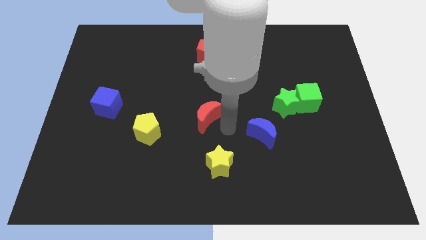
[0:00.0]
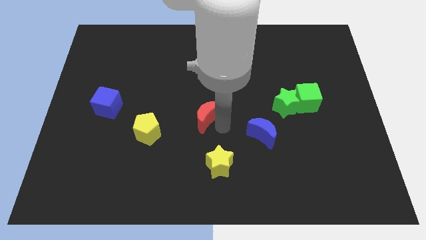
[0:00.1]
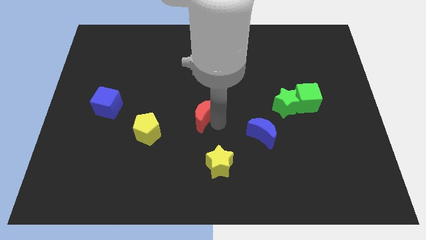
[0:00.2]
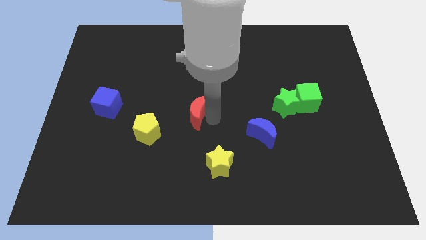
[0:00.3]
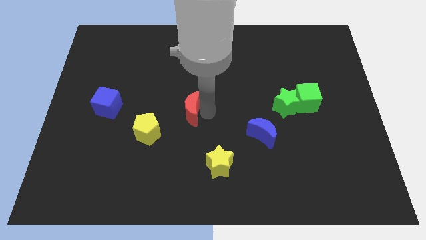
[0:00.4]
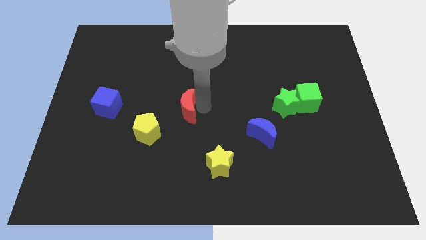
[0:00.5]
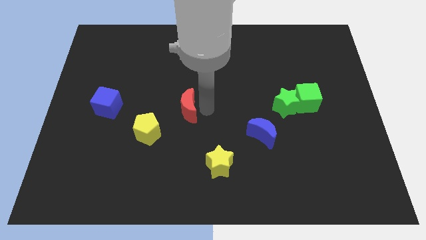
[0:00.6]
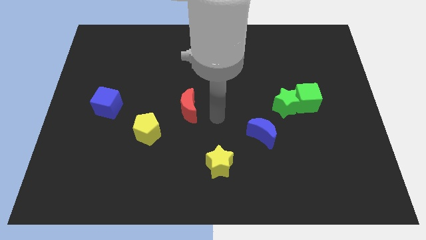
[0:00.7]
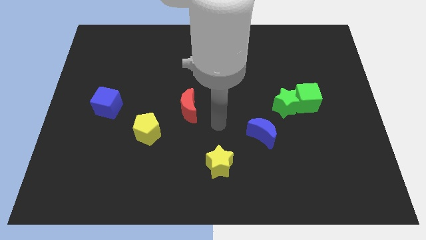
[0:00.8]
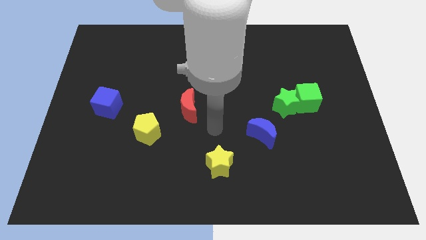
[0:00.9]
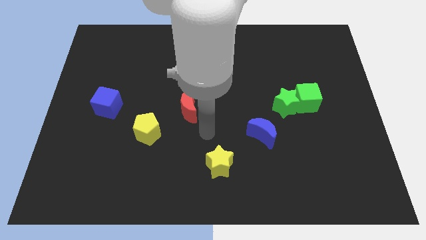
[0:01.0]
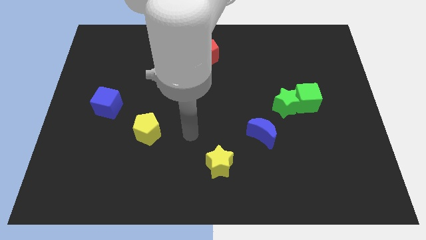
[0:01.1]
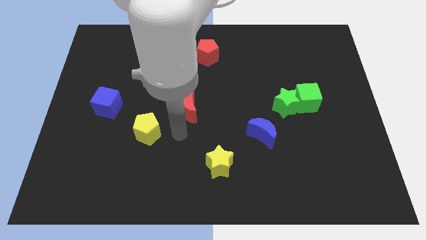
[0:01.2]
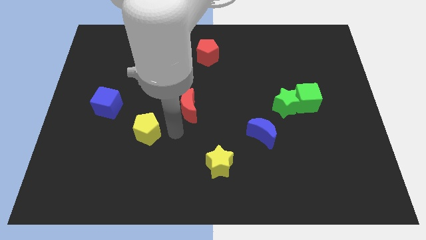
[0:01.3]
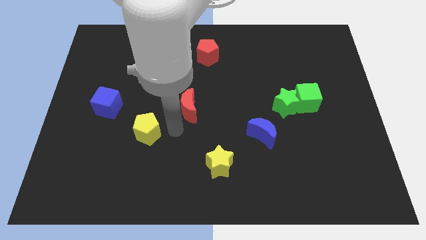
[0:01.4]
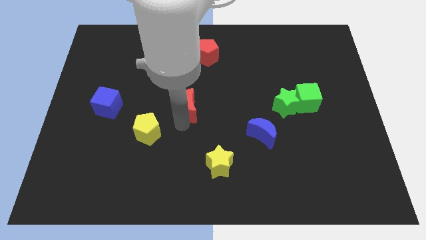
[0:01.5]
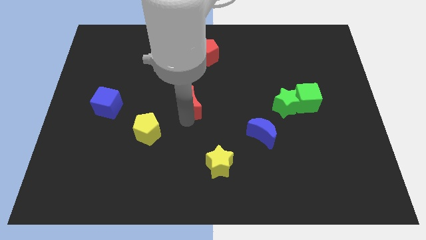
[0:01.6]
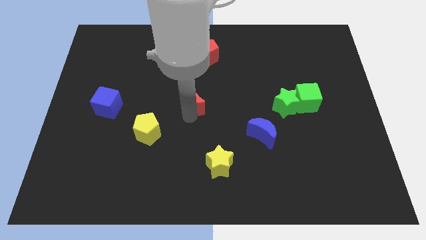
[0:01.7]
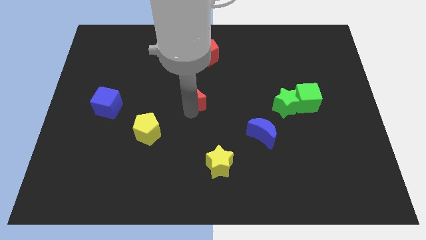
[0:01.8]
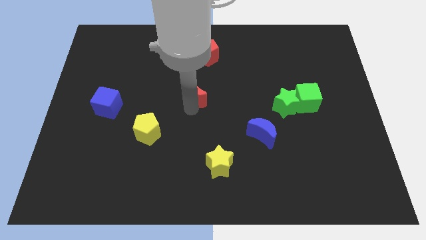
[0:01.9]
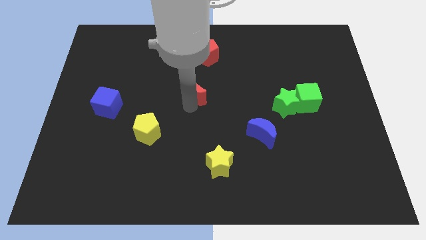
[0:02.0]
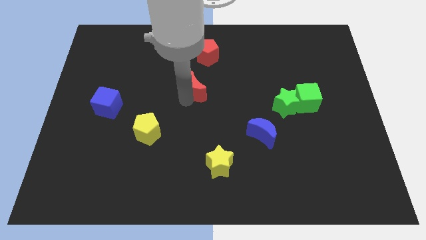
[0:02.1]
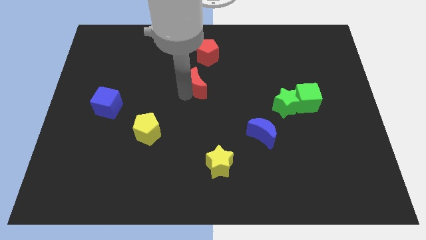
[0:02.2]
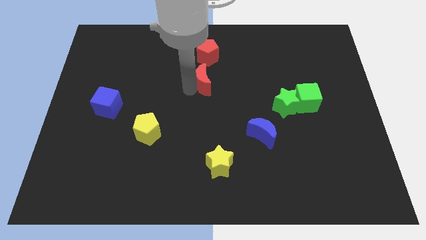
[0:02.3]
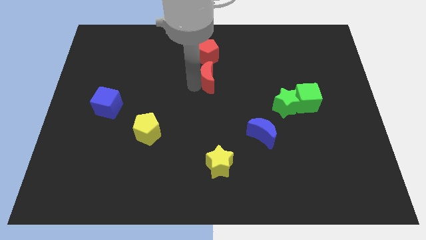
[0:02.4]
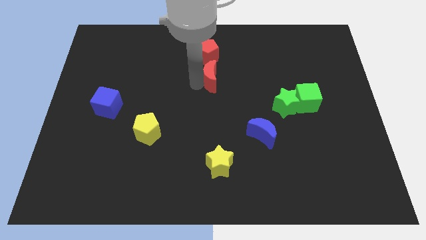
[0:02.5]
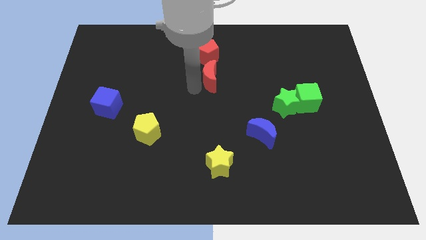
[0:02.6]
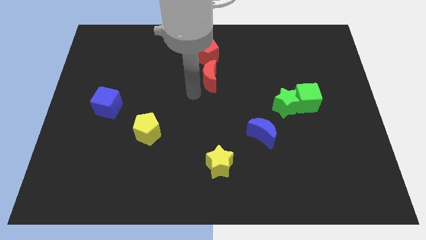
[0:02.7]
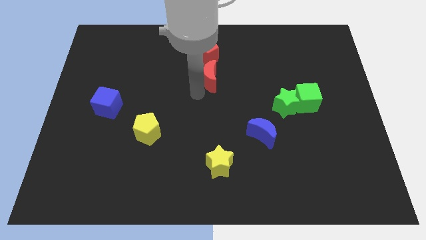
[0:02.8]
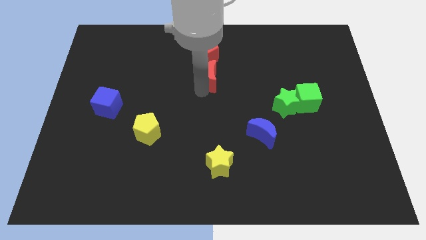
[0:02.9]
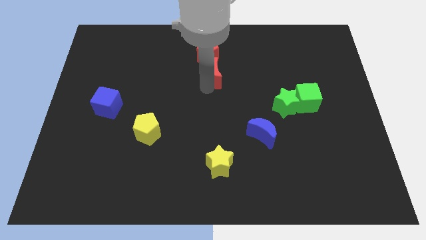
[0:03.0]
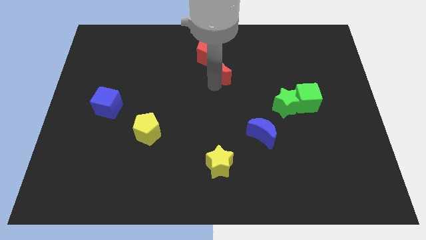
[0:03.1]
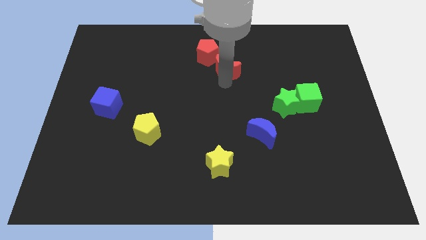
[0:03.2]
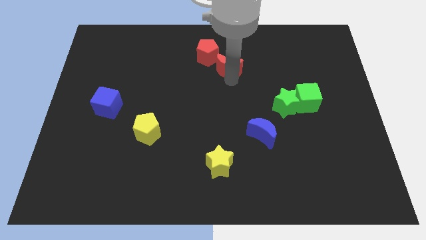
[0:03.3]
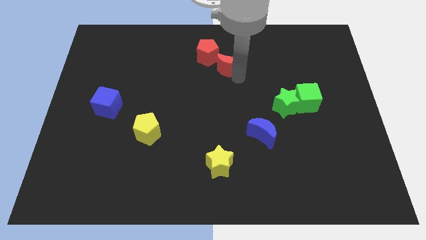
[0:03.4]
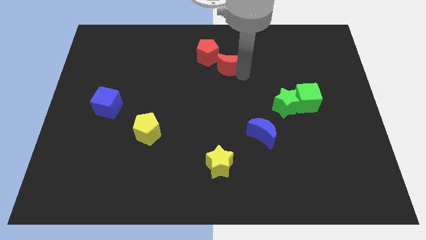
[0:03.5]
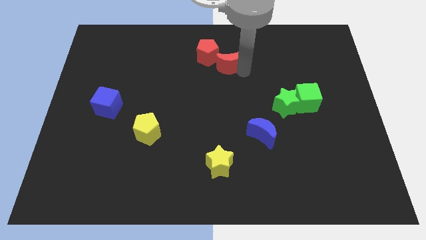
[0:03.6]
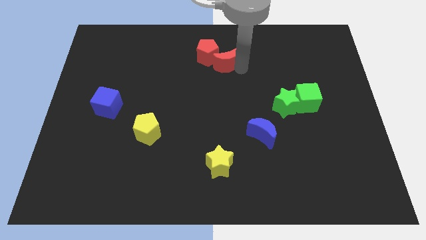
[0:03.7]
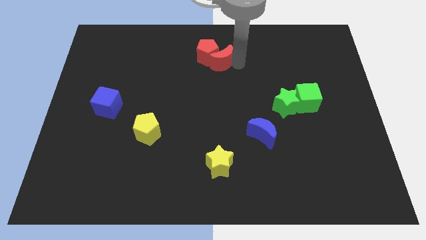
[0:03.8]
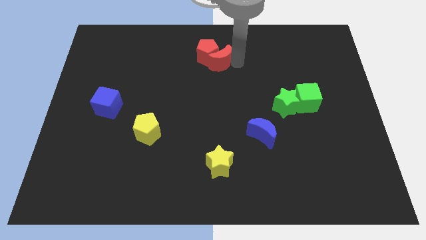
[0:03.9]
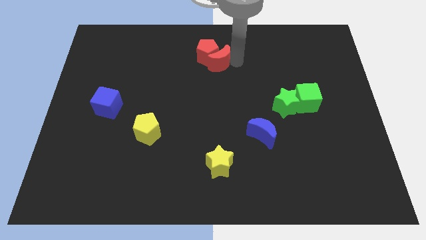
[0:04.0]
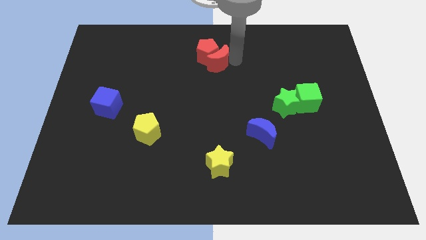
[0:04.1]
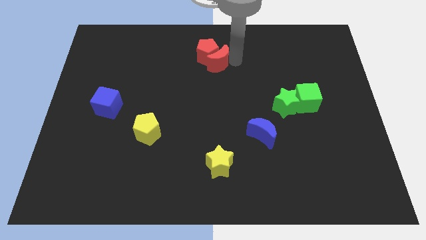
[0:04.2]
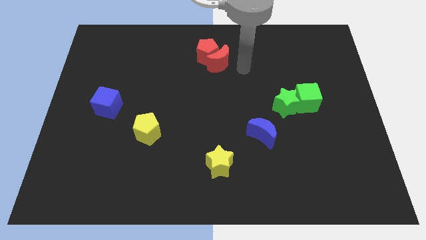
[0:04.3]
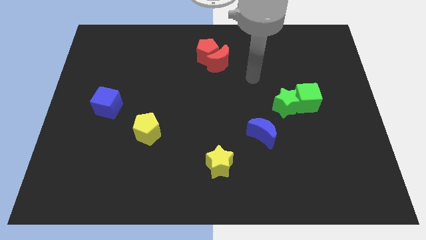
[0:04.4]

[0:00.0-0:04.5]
push the red moon into the red pentagon

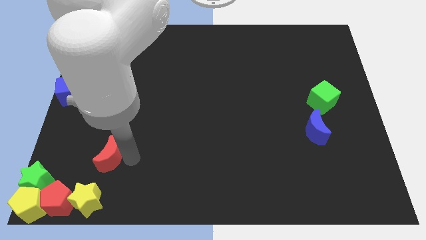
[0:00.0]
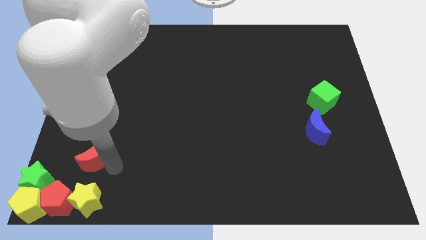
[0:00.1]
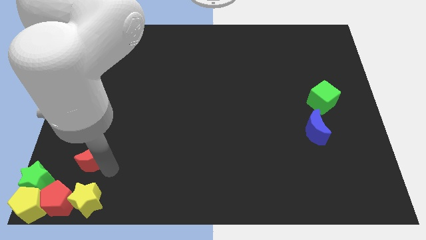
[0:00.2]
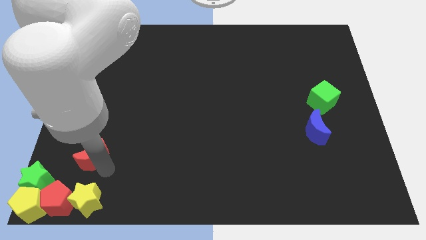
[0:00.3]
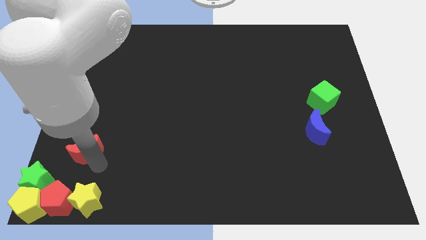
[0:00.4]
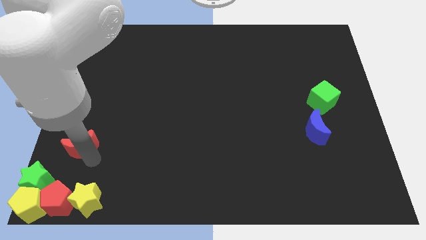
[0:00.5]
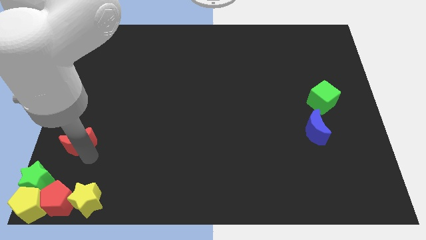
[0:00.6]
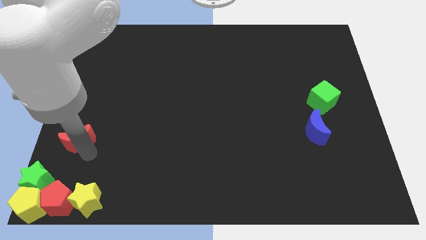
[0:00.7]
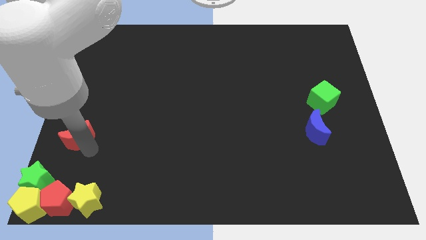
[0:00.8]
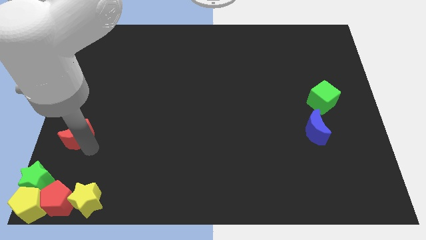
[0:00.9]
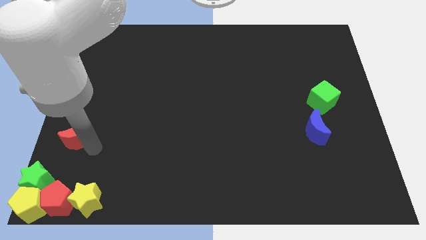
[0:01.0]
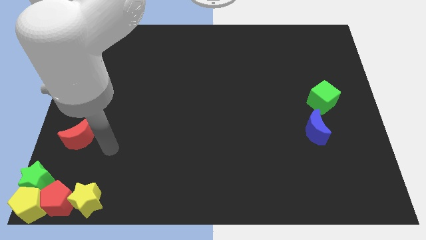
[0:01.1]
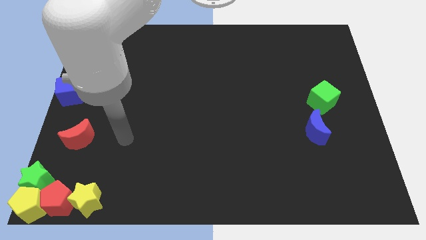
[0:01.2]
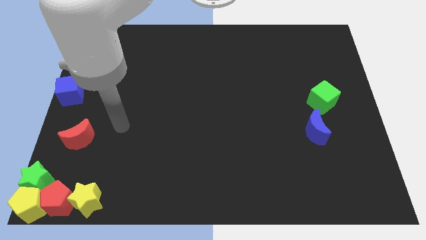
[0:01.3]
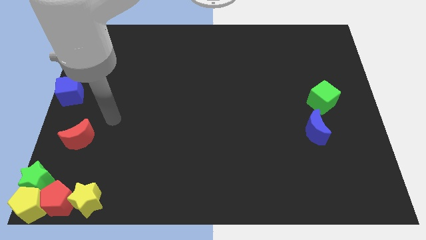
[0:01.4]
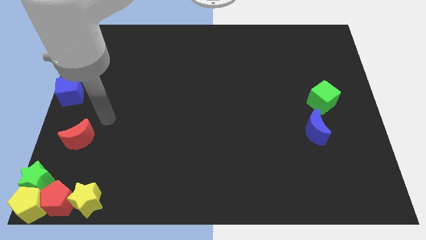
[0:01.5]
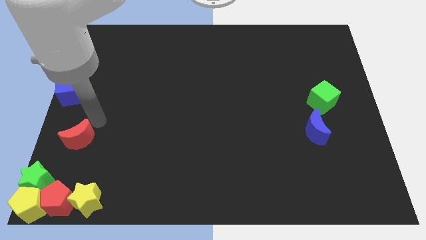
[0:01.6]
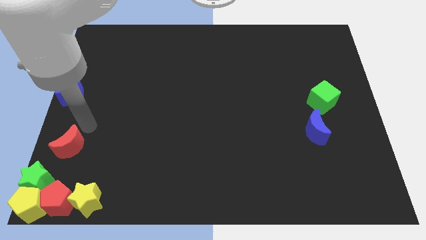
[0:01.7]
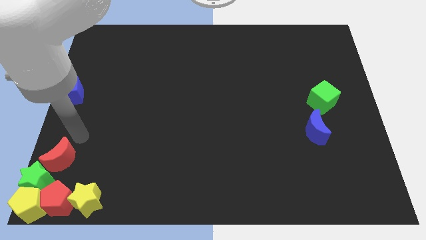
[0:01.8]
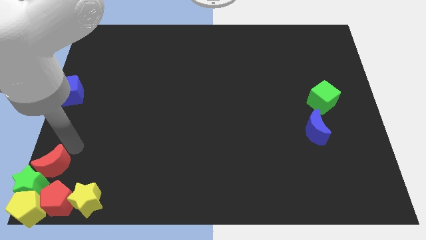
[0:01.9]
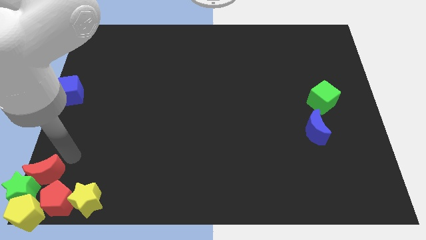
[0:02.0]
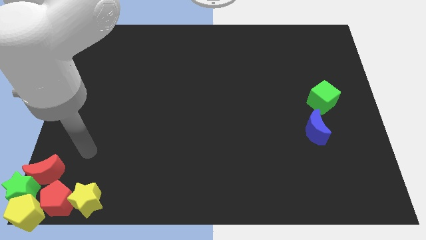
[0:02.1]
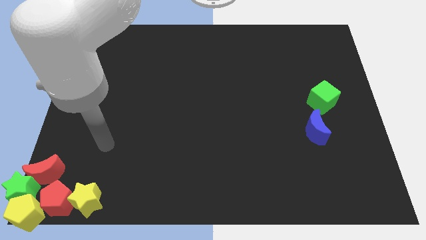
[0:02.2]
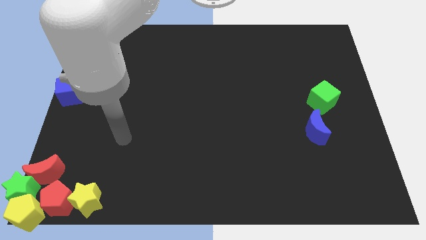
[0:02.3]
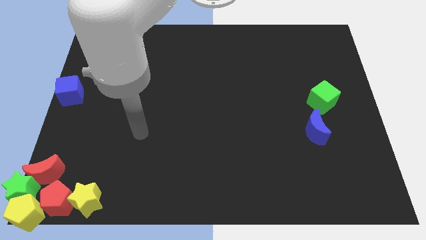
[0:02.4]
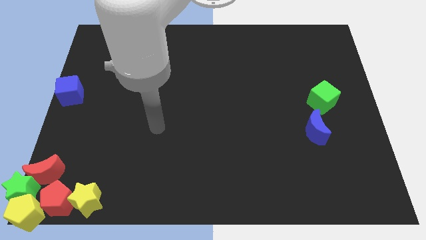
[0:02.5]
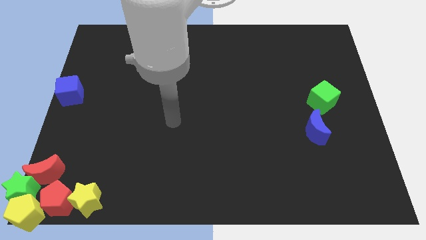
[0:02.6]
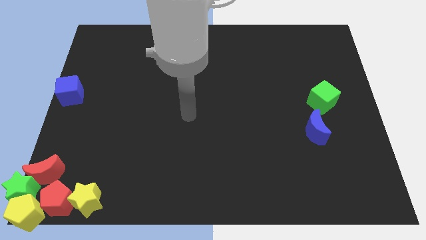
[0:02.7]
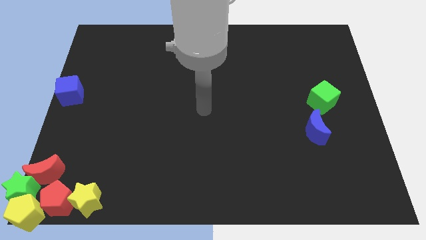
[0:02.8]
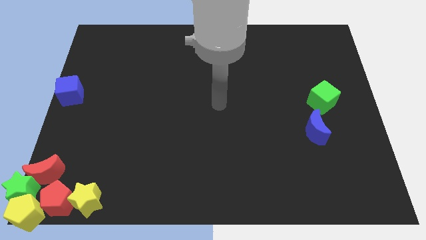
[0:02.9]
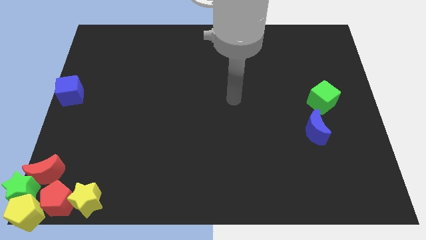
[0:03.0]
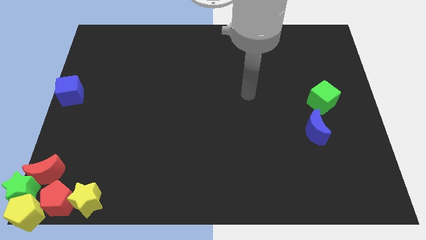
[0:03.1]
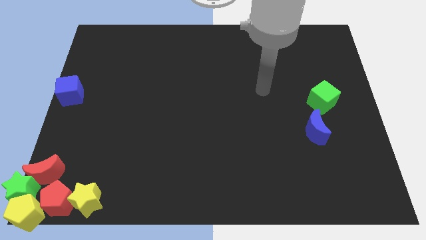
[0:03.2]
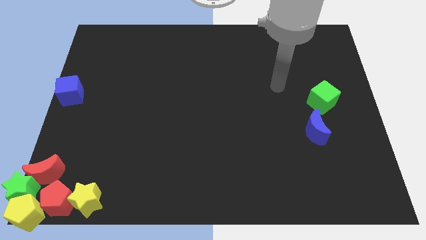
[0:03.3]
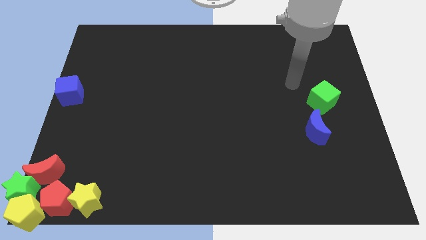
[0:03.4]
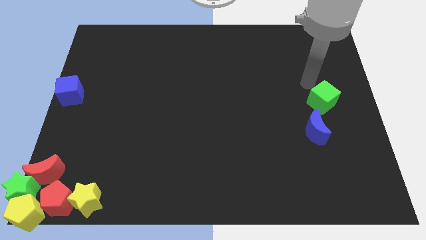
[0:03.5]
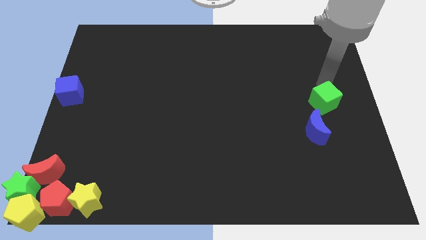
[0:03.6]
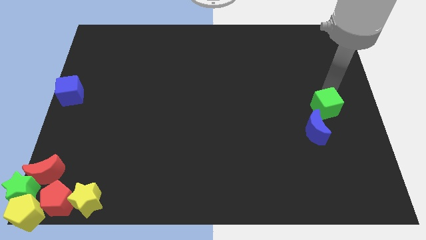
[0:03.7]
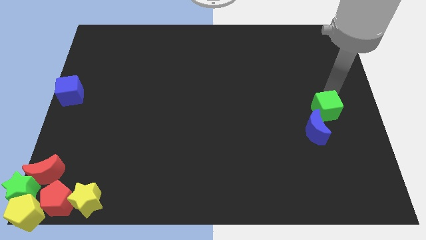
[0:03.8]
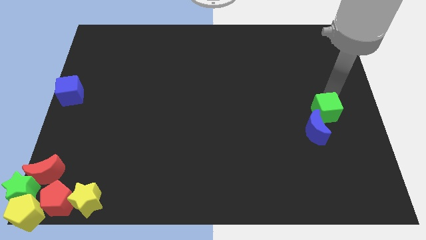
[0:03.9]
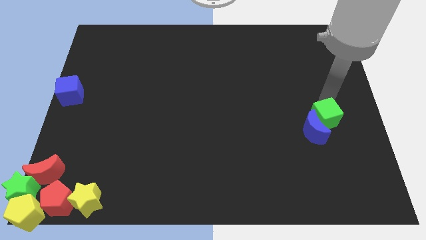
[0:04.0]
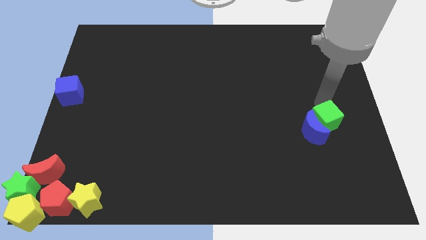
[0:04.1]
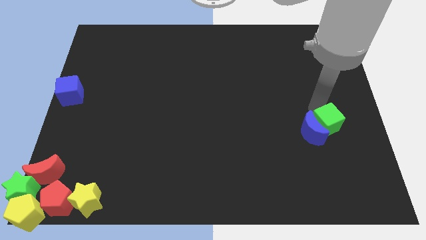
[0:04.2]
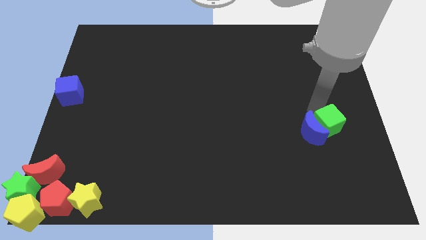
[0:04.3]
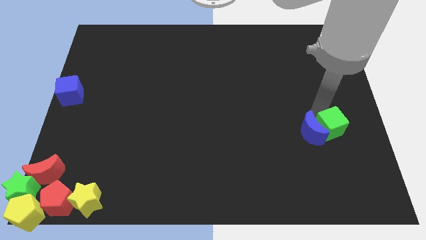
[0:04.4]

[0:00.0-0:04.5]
push the red crescent into the green star
